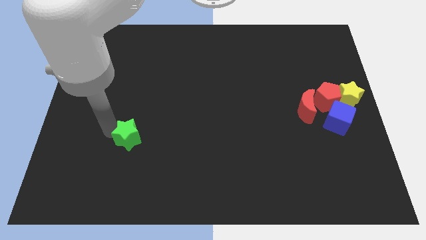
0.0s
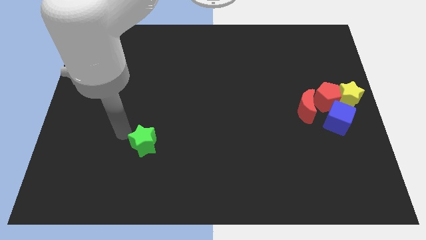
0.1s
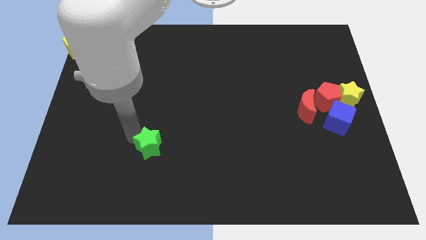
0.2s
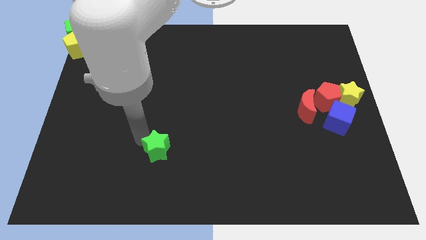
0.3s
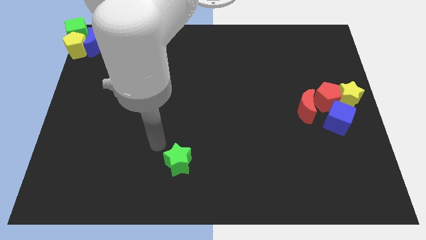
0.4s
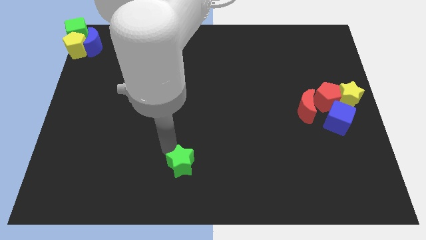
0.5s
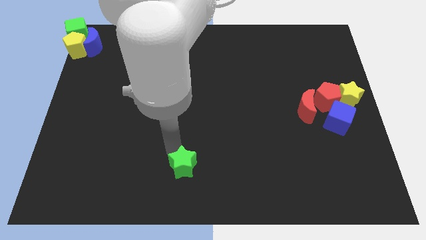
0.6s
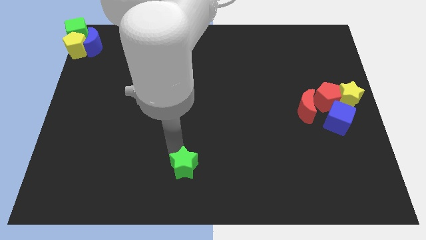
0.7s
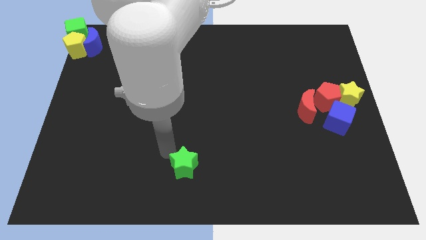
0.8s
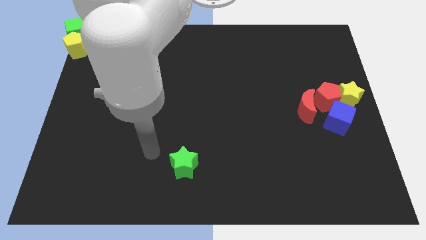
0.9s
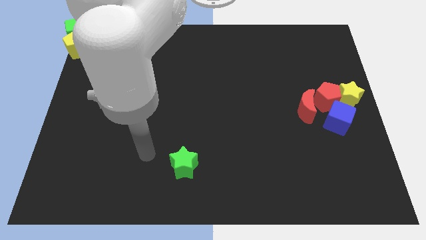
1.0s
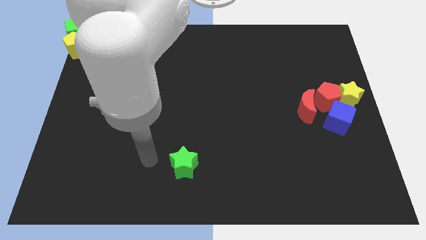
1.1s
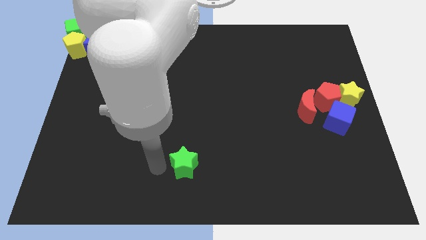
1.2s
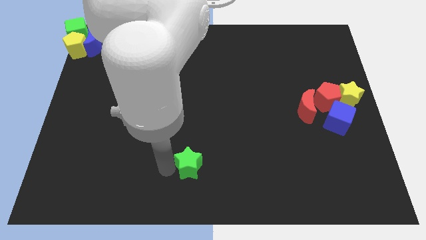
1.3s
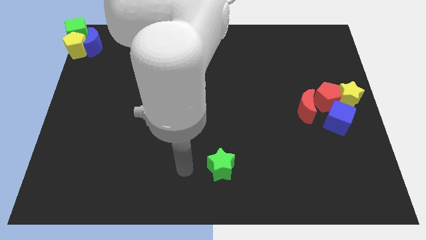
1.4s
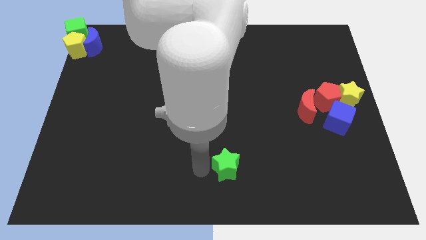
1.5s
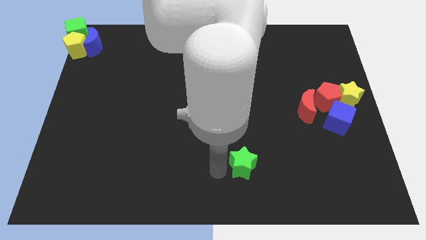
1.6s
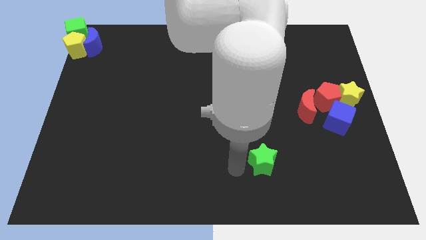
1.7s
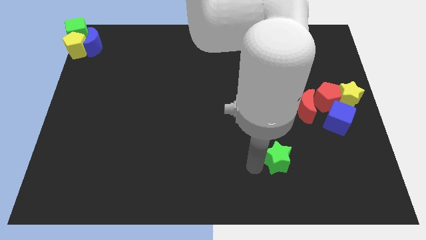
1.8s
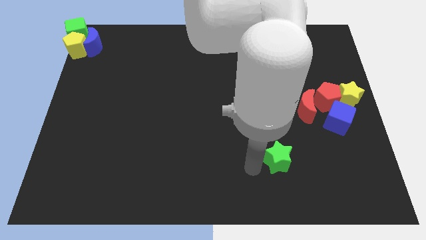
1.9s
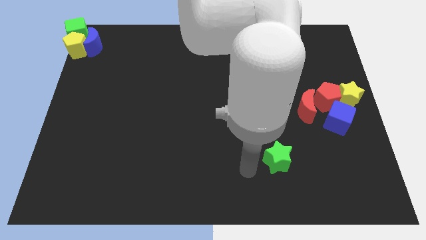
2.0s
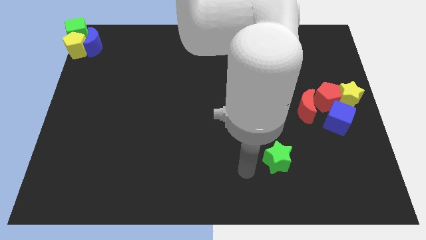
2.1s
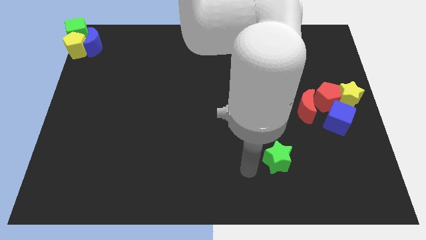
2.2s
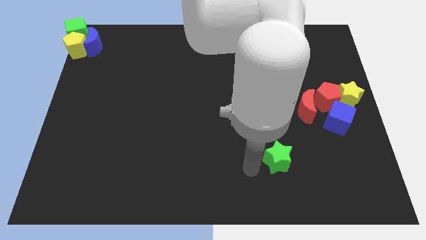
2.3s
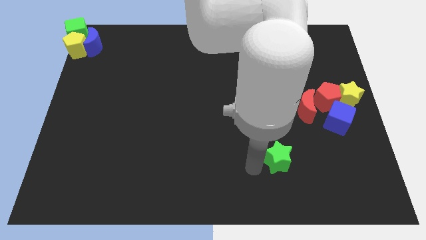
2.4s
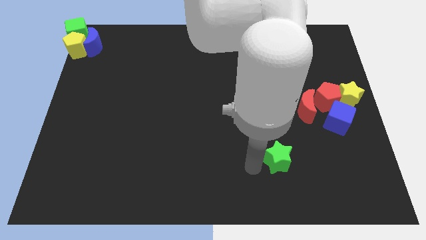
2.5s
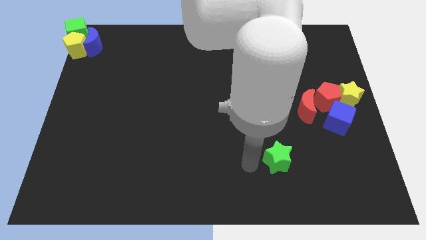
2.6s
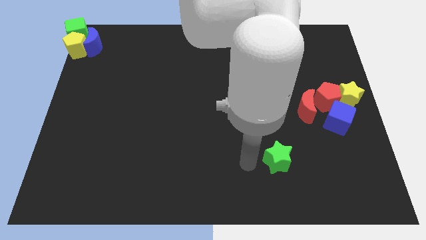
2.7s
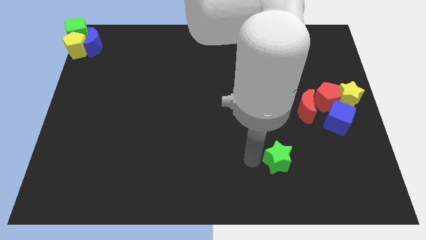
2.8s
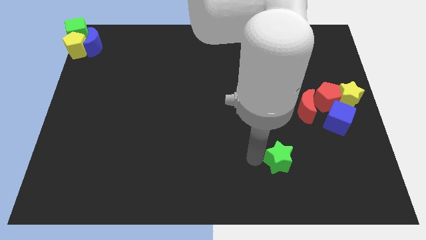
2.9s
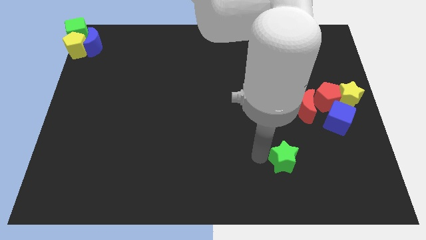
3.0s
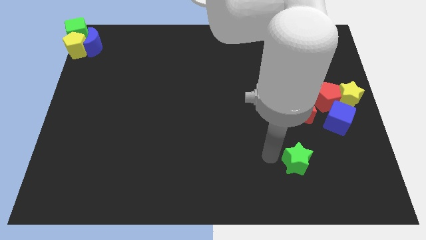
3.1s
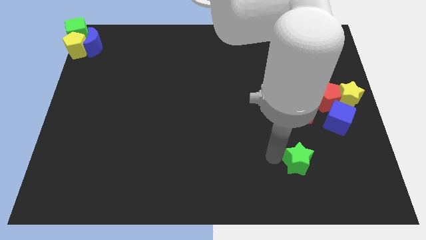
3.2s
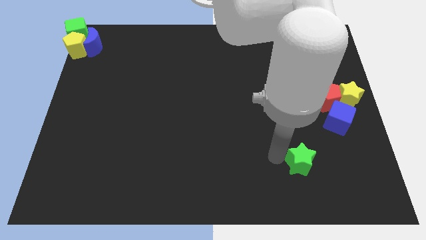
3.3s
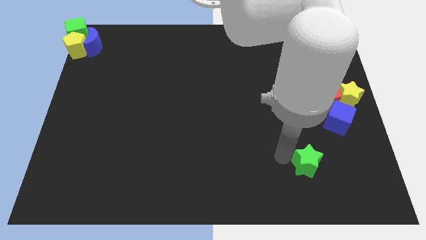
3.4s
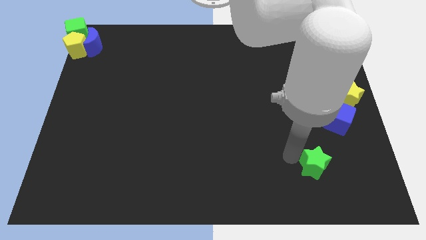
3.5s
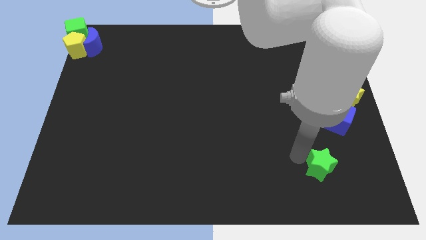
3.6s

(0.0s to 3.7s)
push green star below red pentagon

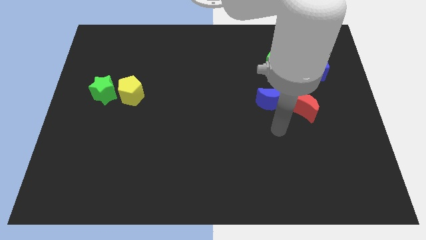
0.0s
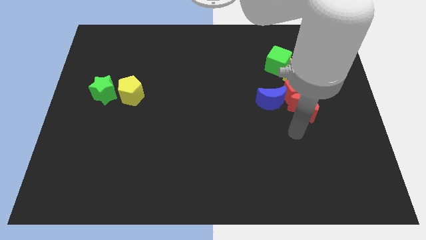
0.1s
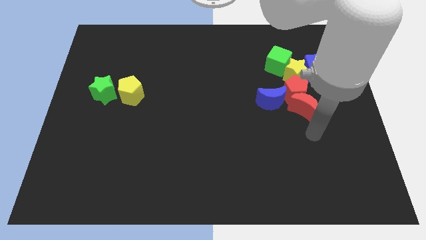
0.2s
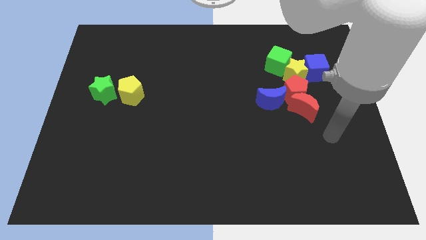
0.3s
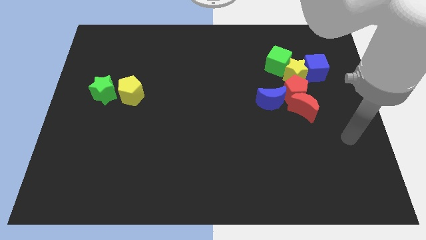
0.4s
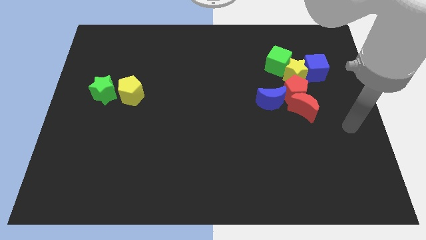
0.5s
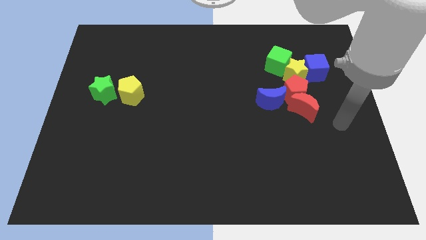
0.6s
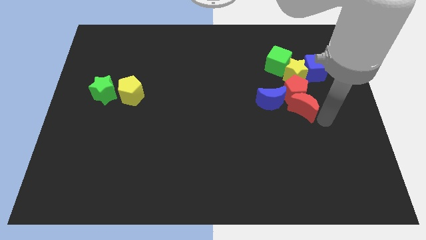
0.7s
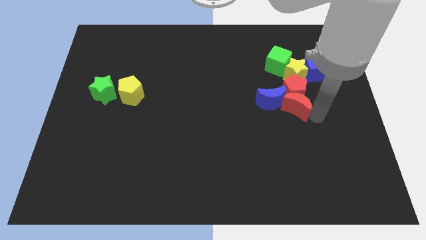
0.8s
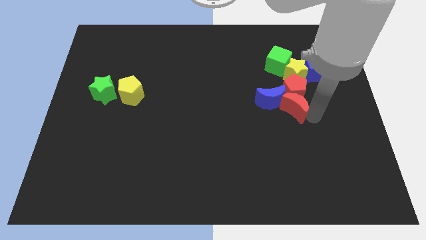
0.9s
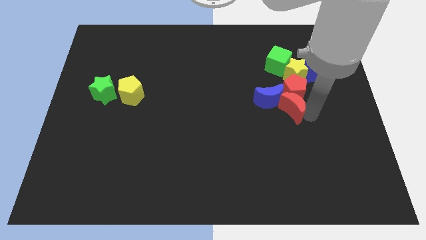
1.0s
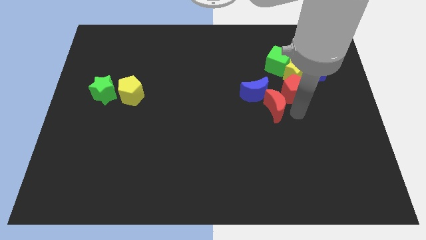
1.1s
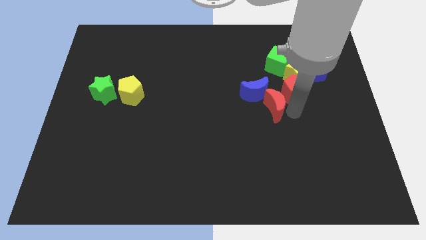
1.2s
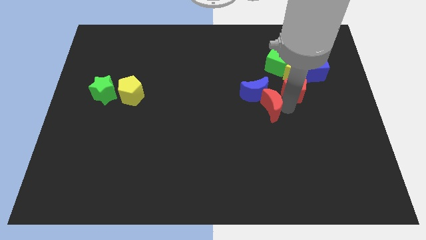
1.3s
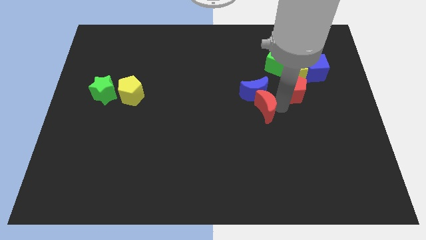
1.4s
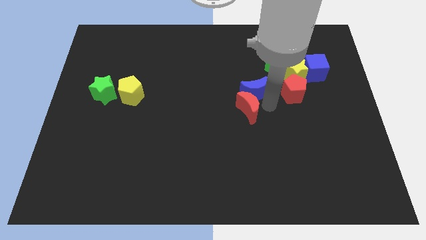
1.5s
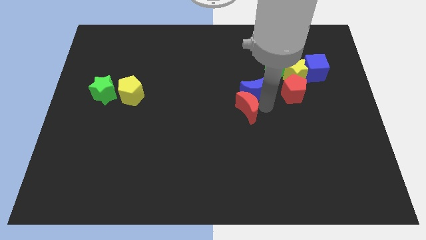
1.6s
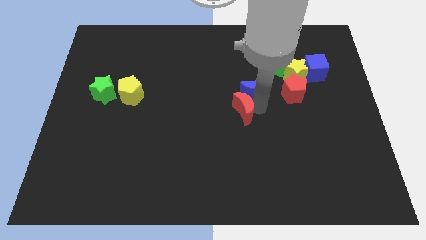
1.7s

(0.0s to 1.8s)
separate the red moon from the red pentagon

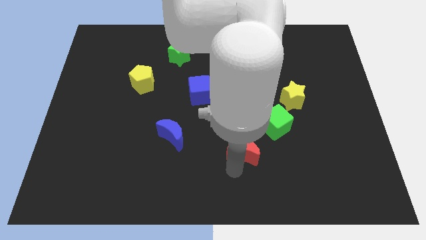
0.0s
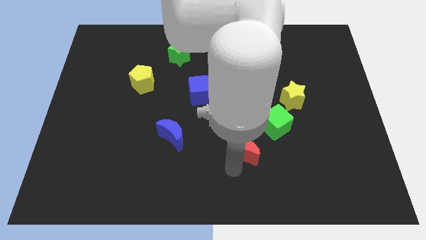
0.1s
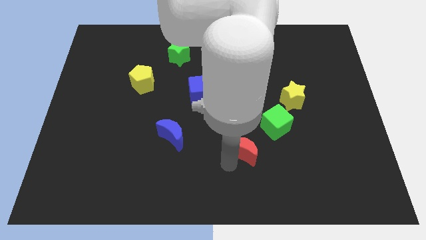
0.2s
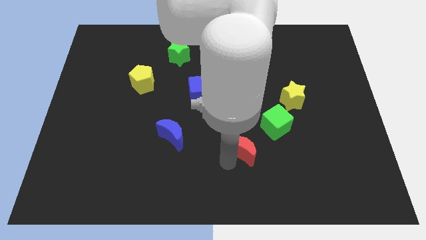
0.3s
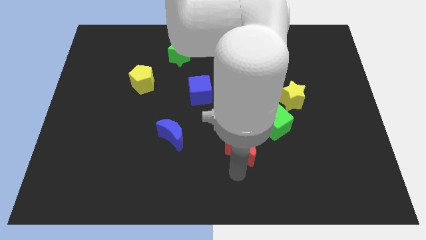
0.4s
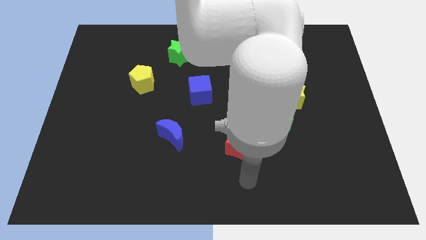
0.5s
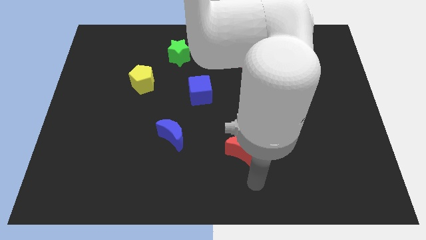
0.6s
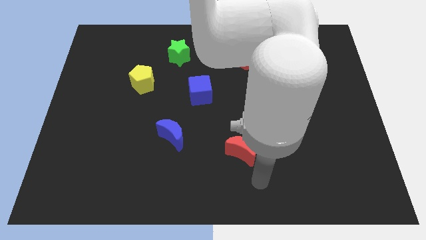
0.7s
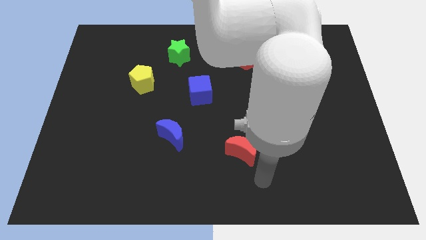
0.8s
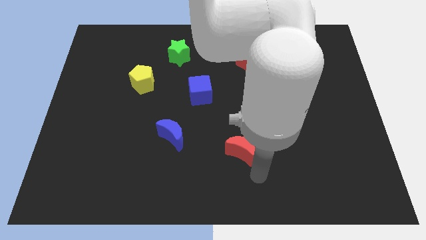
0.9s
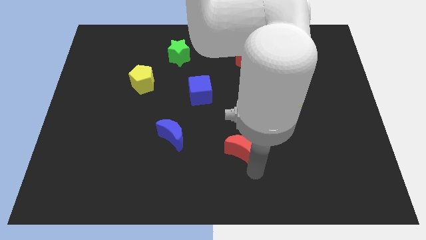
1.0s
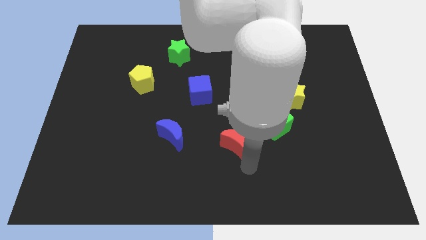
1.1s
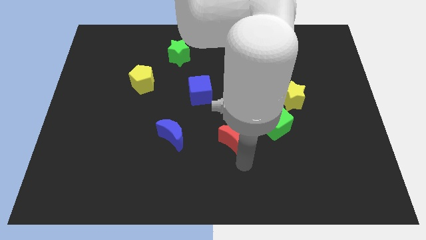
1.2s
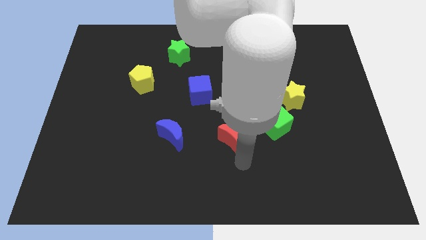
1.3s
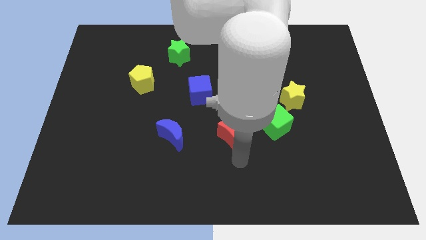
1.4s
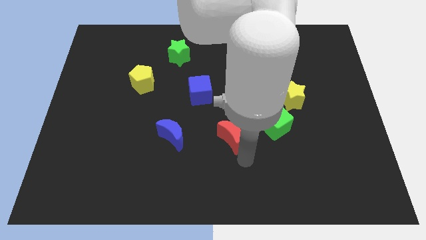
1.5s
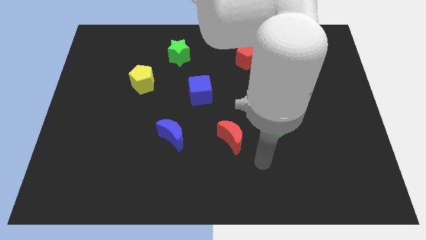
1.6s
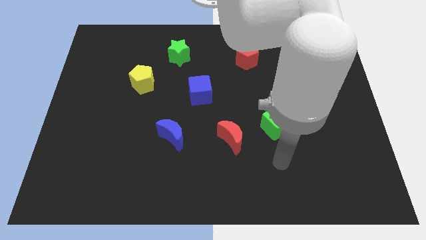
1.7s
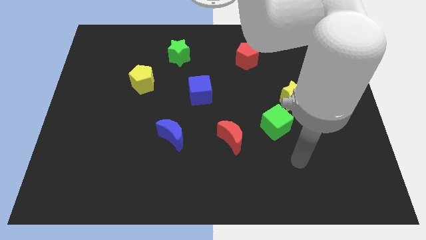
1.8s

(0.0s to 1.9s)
put the red moon to the right of the blue moon

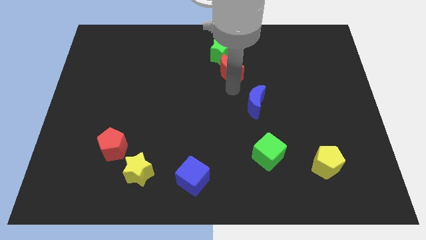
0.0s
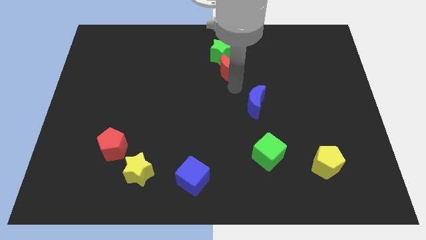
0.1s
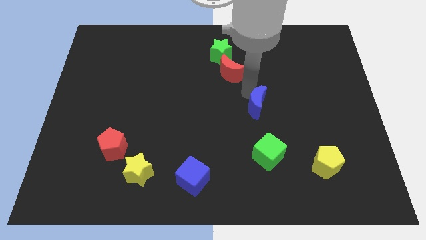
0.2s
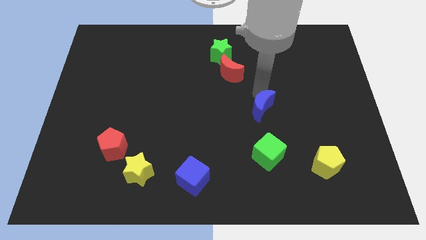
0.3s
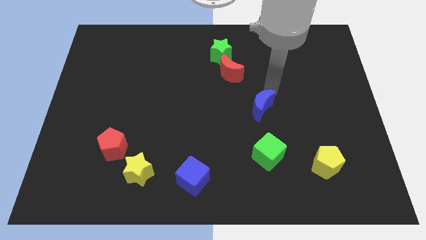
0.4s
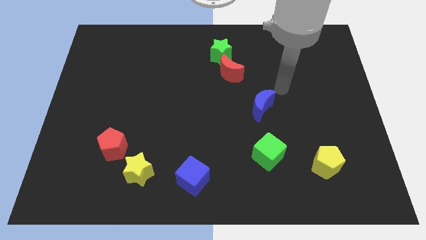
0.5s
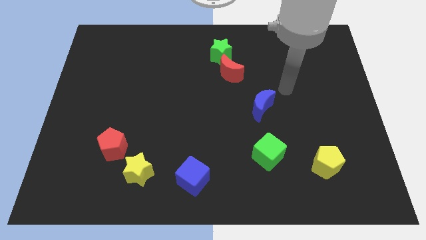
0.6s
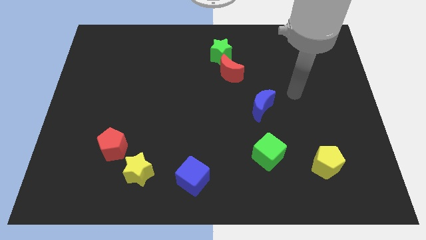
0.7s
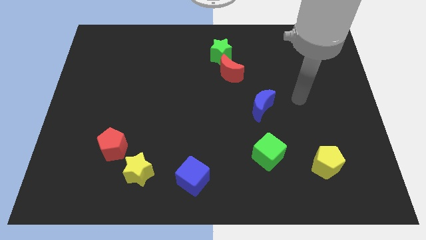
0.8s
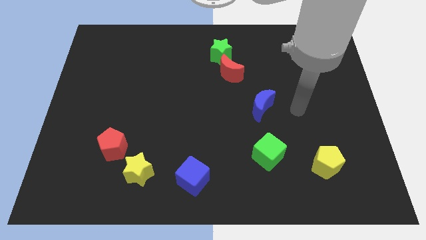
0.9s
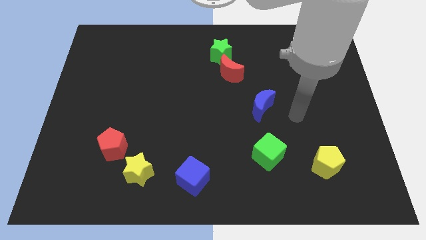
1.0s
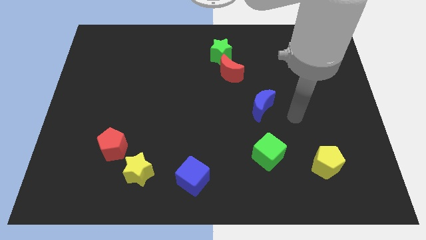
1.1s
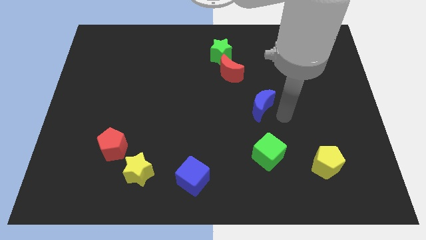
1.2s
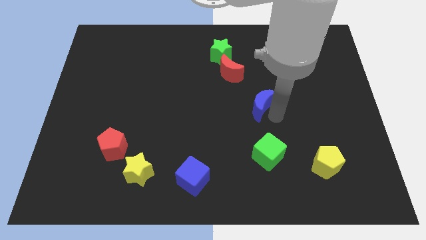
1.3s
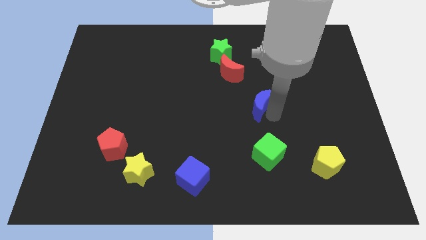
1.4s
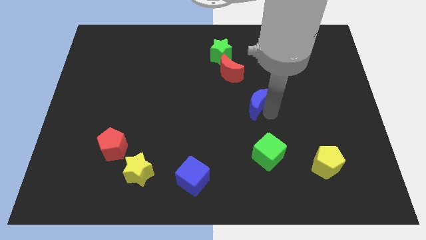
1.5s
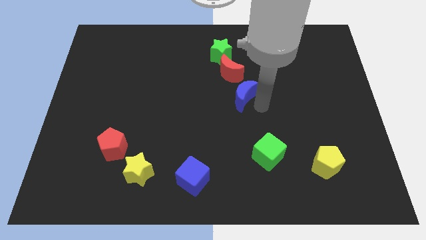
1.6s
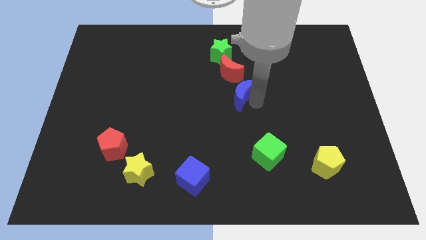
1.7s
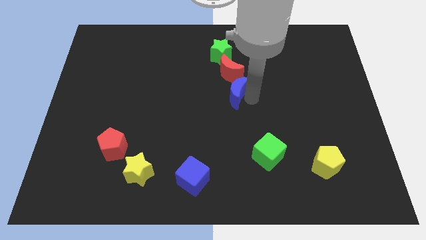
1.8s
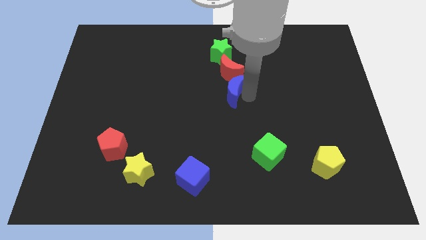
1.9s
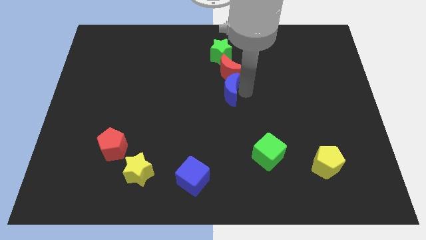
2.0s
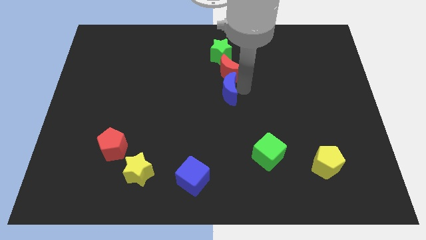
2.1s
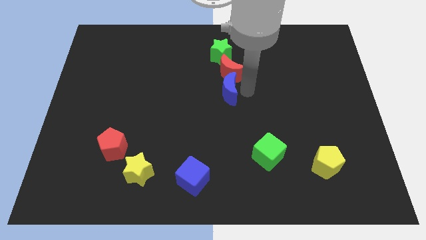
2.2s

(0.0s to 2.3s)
place the blue moon to the bottom of red moon
